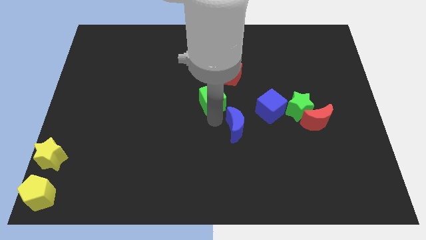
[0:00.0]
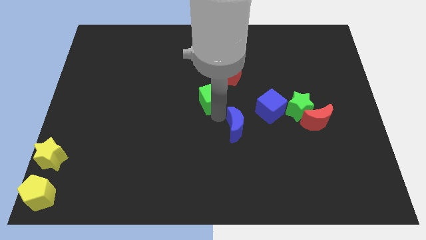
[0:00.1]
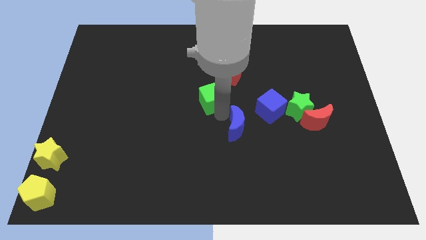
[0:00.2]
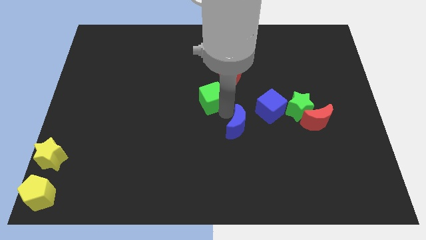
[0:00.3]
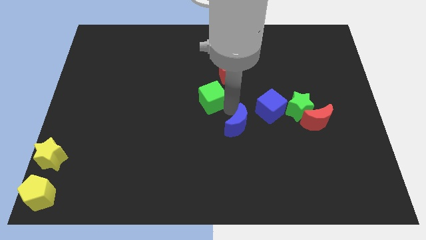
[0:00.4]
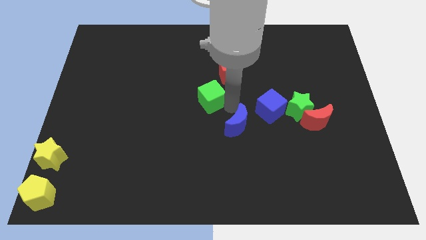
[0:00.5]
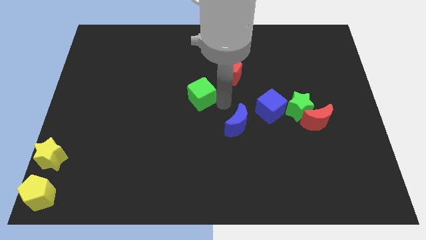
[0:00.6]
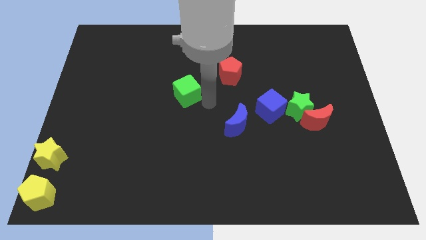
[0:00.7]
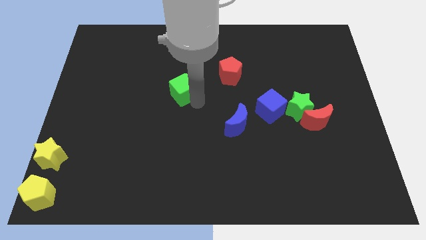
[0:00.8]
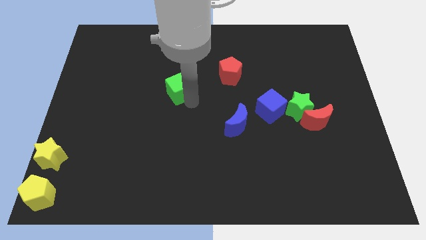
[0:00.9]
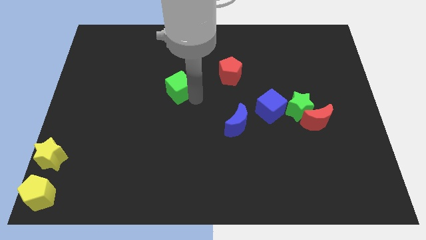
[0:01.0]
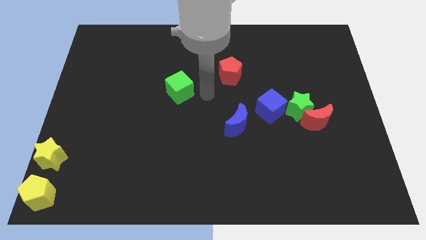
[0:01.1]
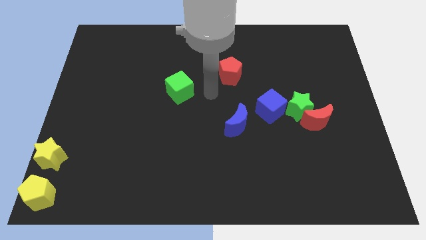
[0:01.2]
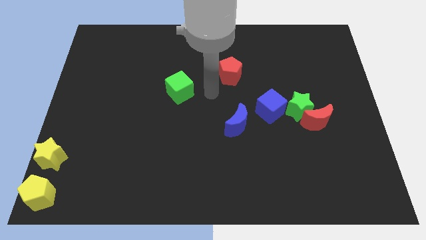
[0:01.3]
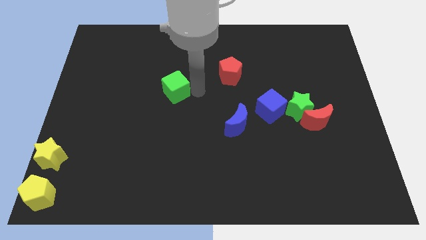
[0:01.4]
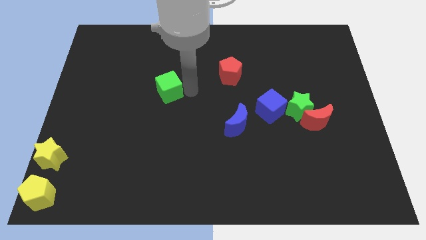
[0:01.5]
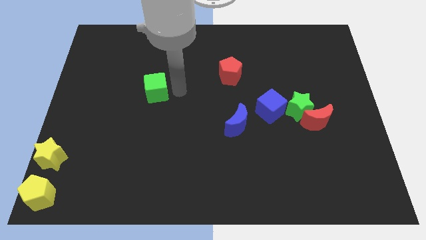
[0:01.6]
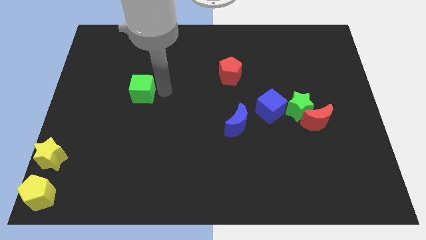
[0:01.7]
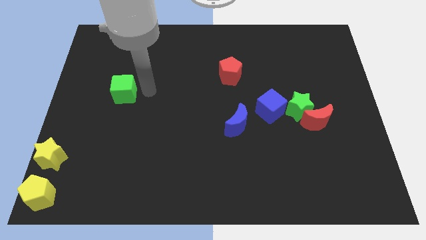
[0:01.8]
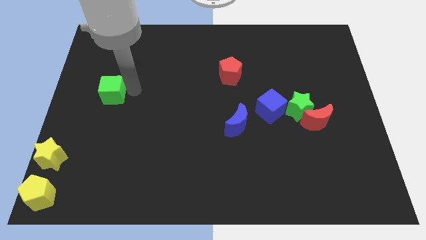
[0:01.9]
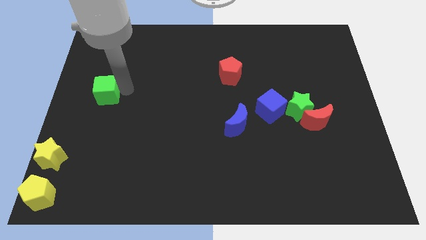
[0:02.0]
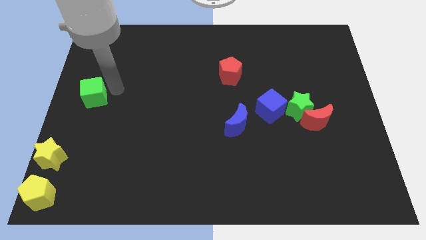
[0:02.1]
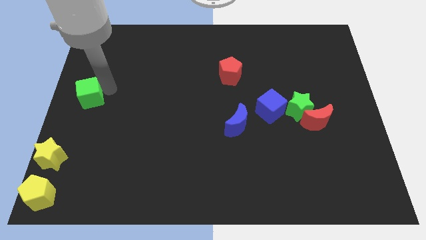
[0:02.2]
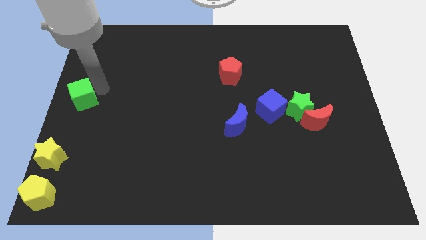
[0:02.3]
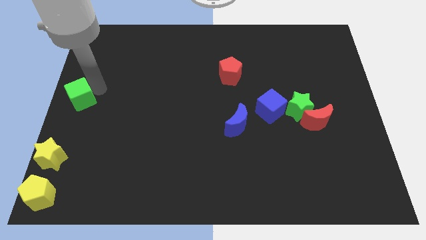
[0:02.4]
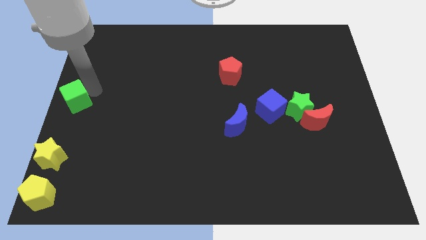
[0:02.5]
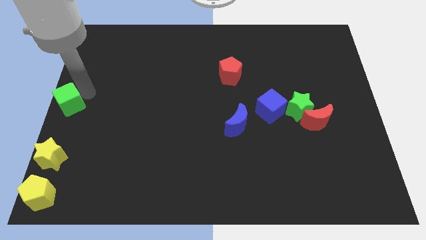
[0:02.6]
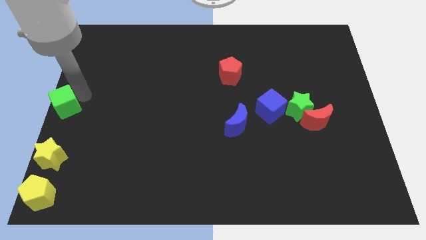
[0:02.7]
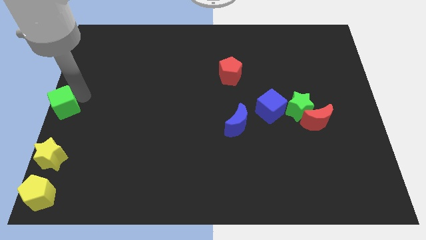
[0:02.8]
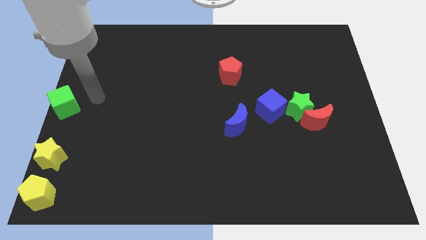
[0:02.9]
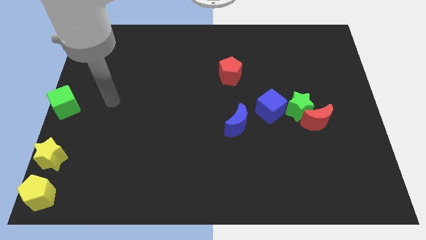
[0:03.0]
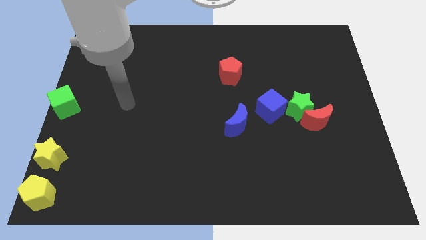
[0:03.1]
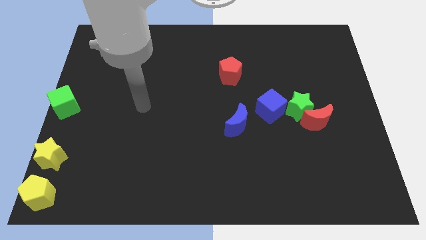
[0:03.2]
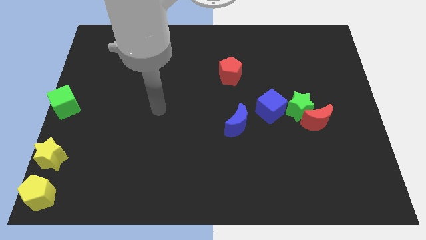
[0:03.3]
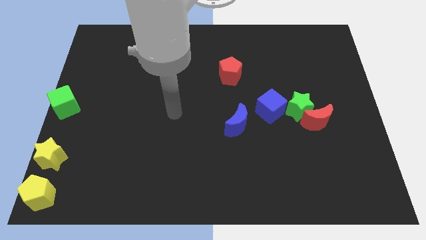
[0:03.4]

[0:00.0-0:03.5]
move the green cube to center left

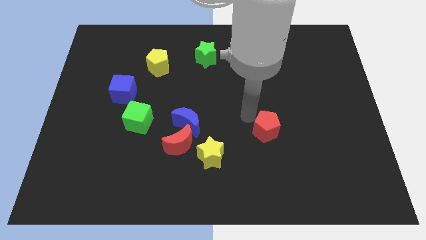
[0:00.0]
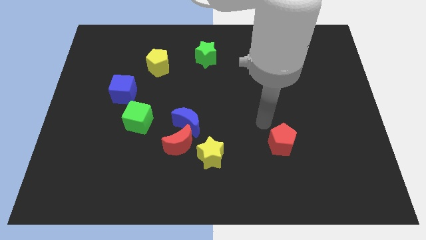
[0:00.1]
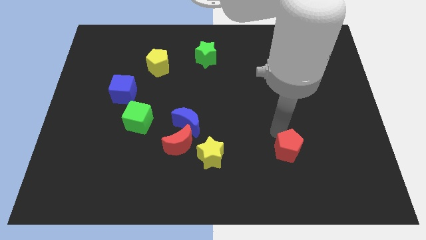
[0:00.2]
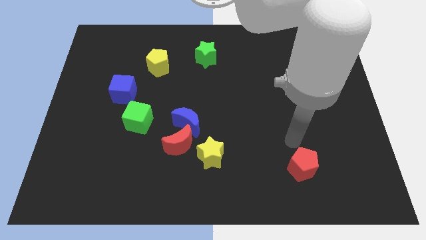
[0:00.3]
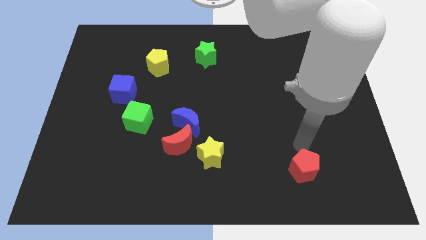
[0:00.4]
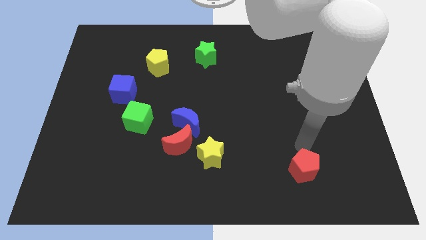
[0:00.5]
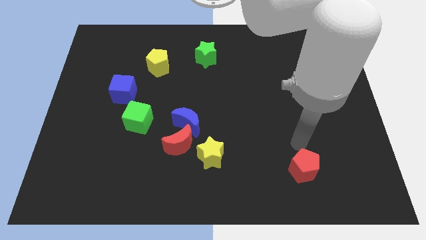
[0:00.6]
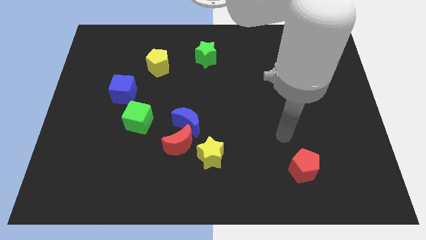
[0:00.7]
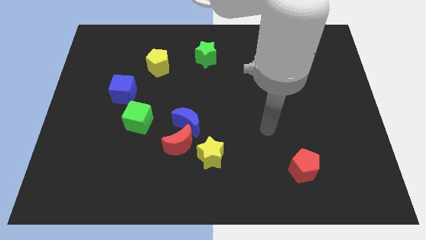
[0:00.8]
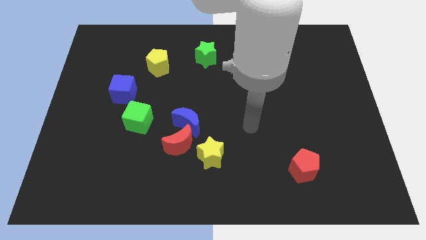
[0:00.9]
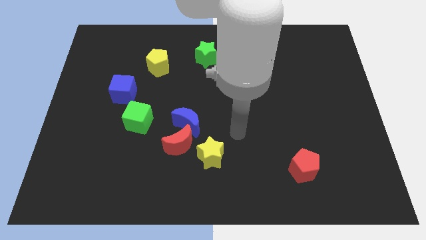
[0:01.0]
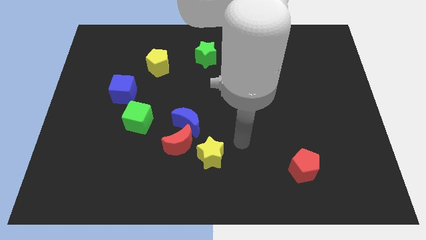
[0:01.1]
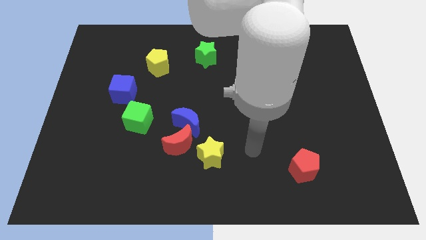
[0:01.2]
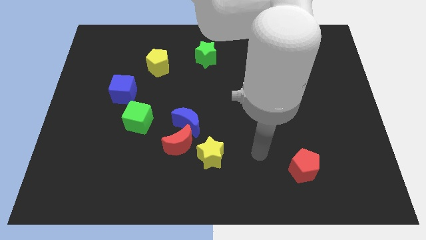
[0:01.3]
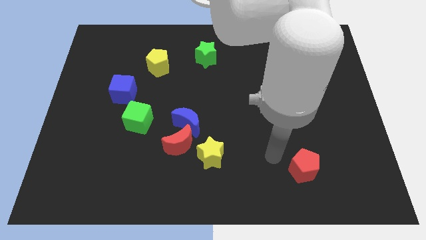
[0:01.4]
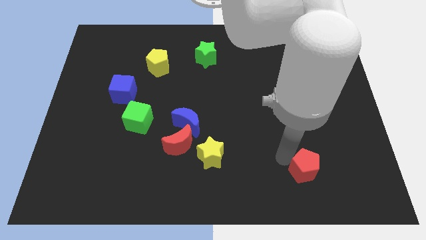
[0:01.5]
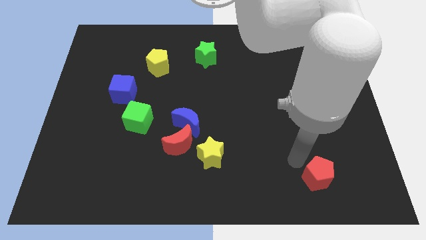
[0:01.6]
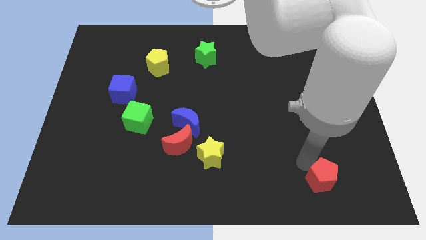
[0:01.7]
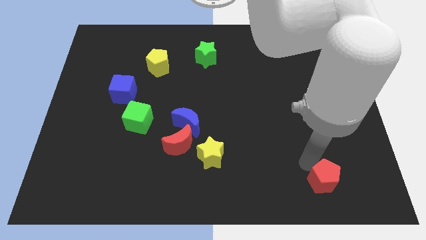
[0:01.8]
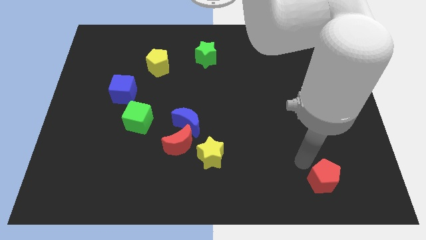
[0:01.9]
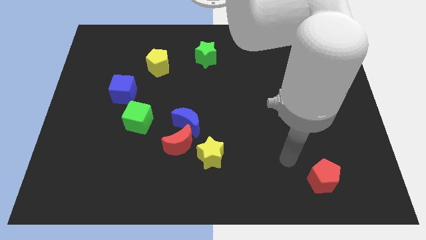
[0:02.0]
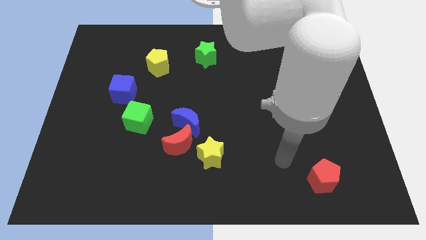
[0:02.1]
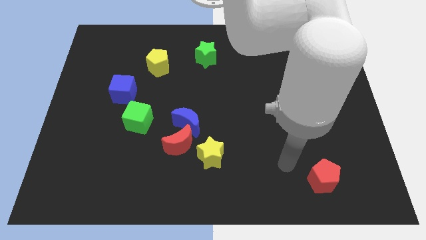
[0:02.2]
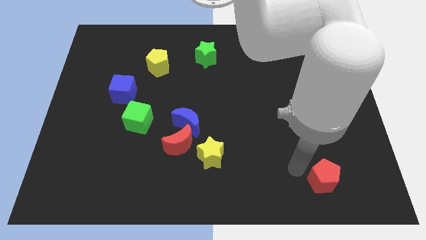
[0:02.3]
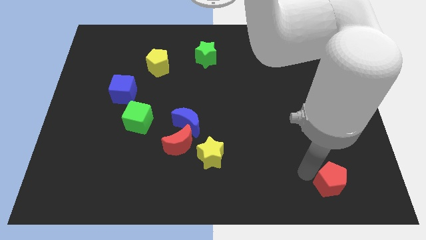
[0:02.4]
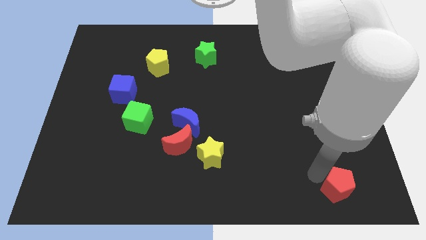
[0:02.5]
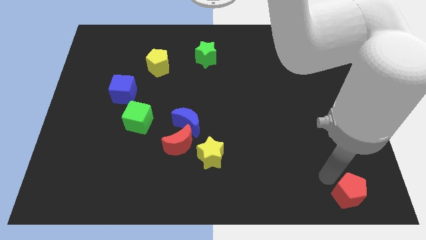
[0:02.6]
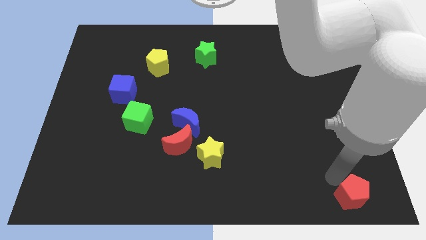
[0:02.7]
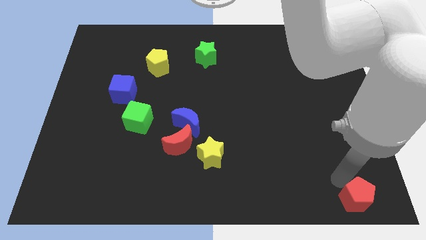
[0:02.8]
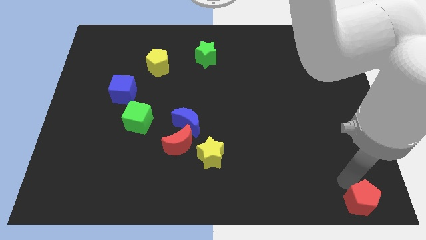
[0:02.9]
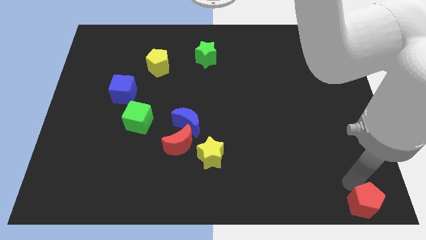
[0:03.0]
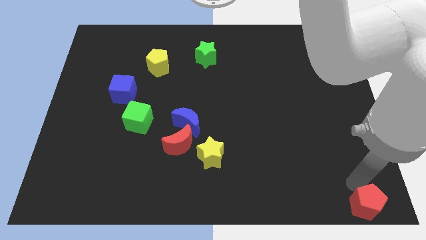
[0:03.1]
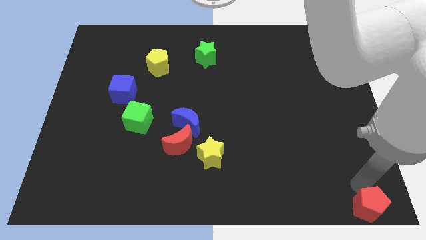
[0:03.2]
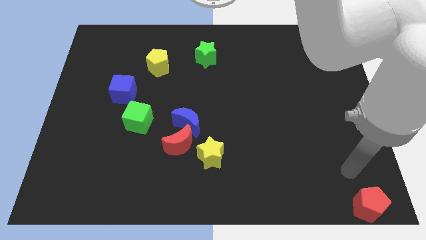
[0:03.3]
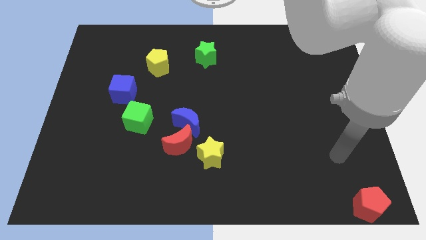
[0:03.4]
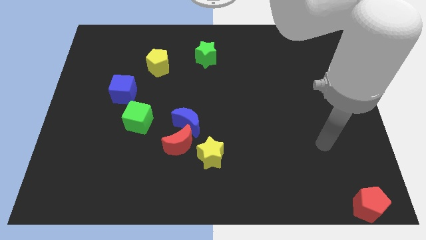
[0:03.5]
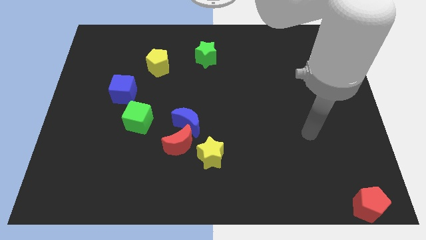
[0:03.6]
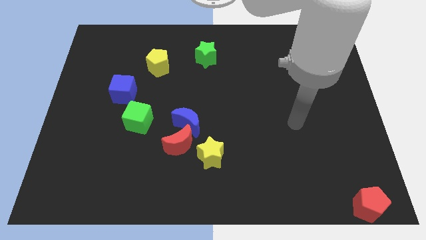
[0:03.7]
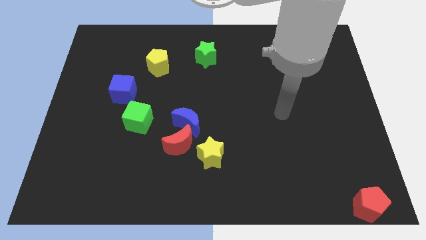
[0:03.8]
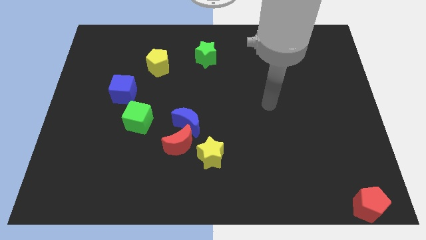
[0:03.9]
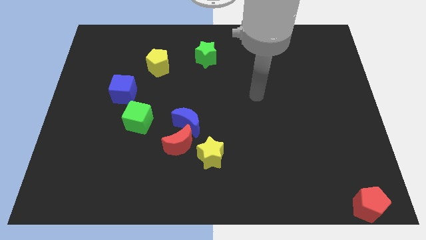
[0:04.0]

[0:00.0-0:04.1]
place red pentagon to the bottom right

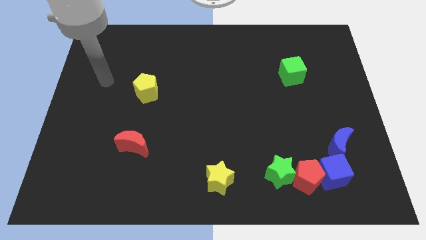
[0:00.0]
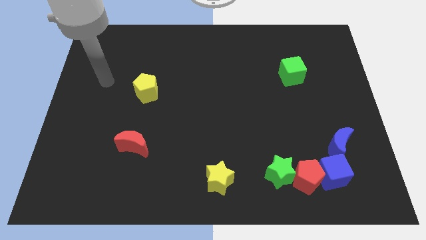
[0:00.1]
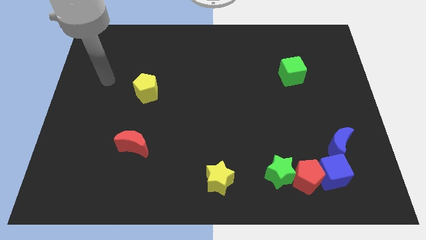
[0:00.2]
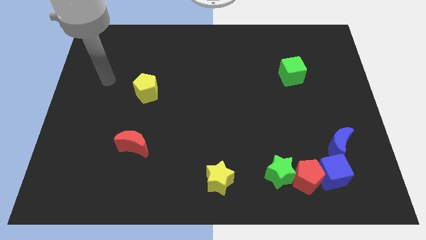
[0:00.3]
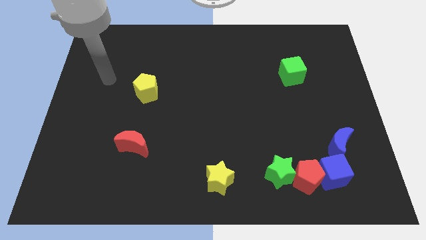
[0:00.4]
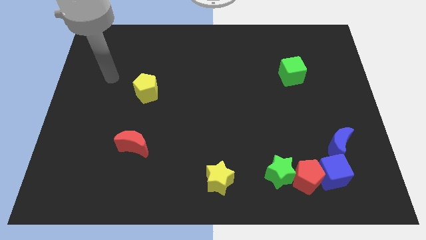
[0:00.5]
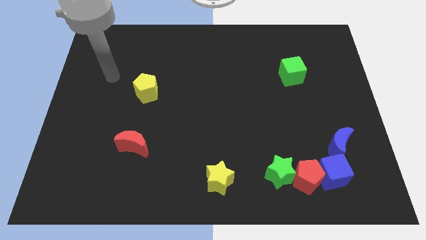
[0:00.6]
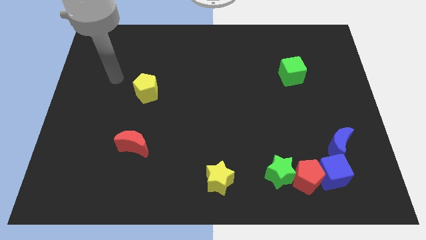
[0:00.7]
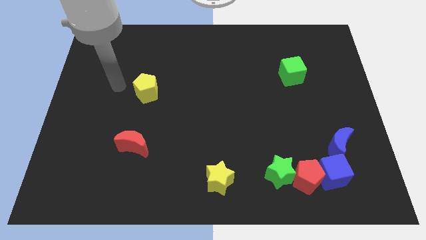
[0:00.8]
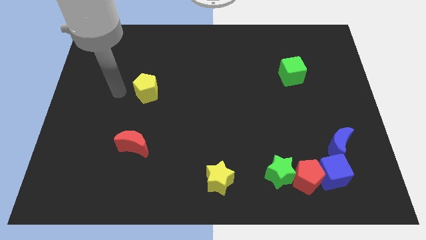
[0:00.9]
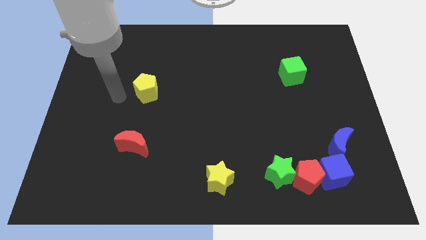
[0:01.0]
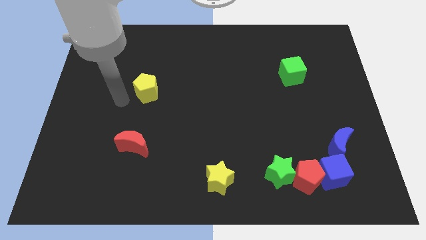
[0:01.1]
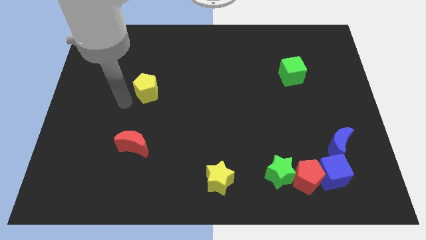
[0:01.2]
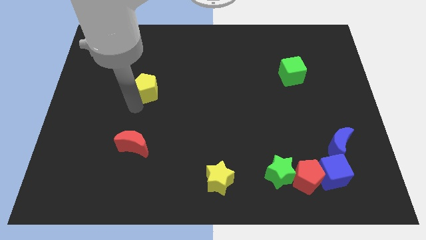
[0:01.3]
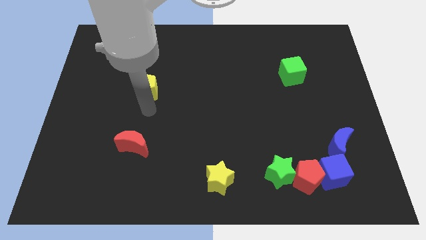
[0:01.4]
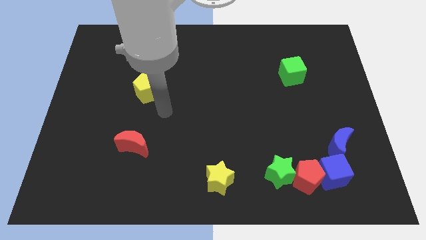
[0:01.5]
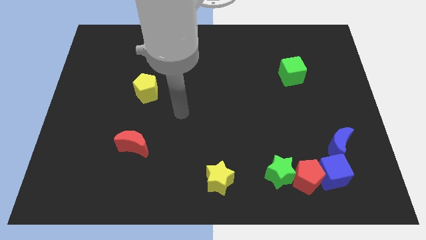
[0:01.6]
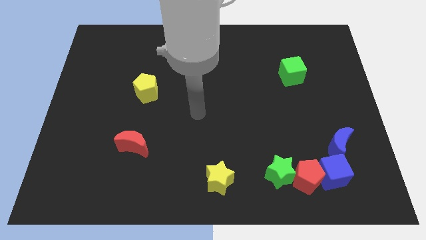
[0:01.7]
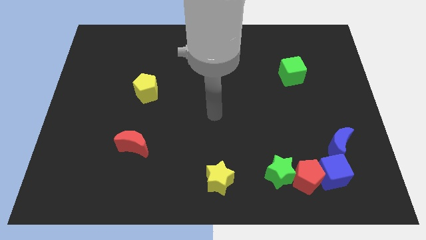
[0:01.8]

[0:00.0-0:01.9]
point your arm on top of yellow star
